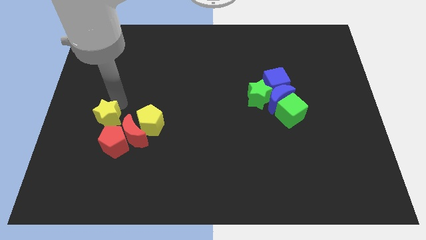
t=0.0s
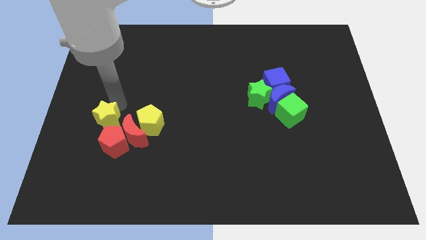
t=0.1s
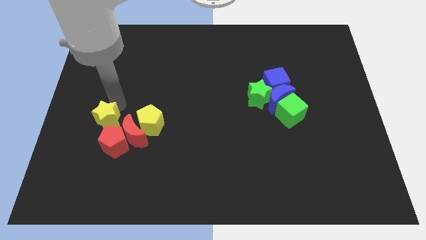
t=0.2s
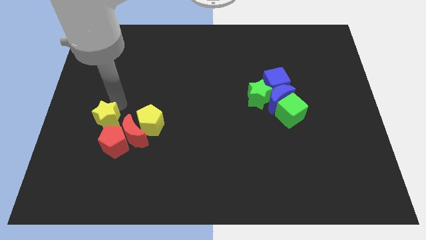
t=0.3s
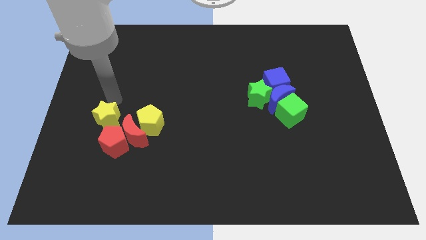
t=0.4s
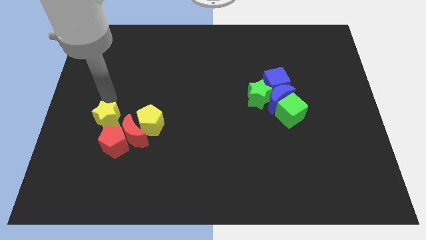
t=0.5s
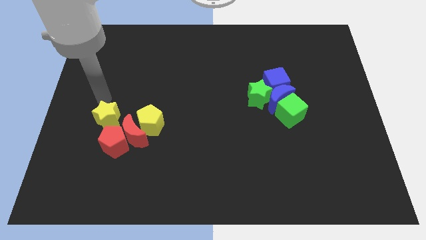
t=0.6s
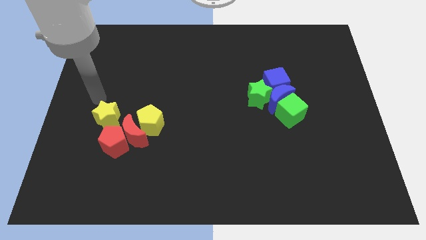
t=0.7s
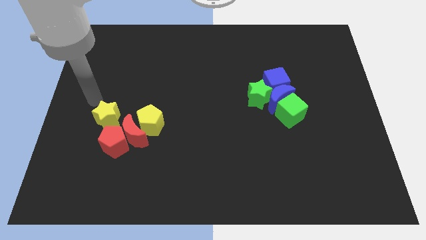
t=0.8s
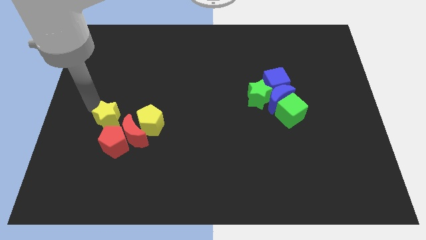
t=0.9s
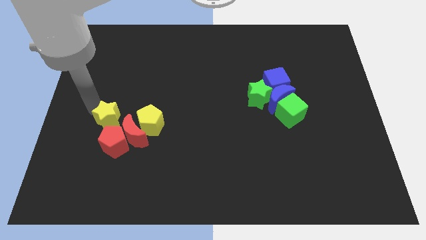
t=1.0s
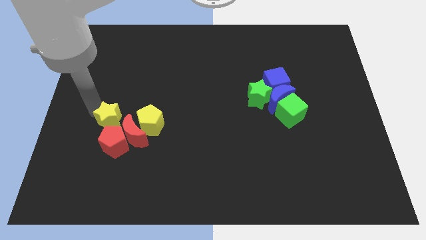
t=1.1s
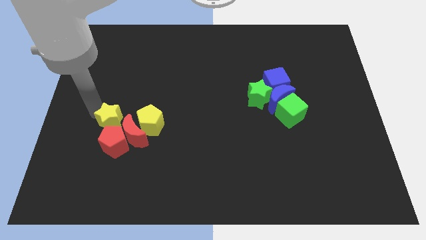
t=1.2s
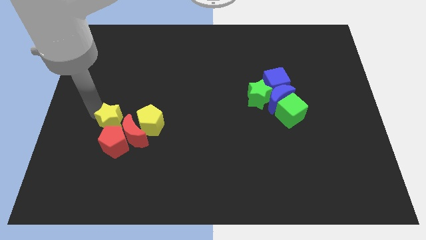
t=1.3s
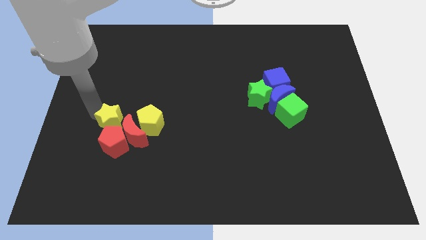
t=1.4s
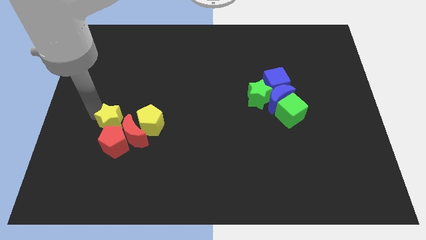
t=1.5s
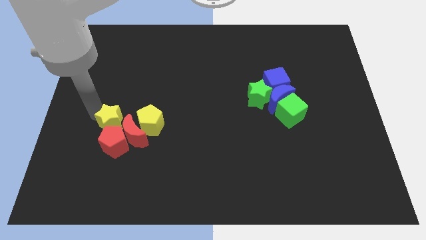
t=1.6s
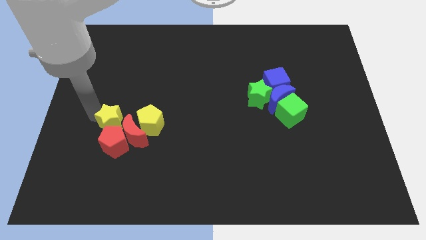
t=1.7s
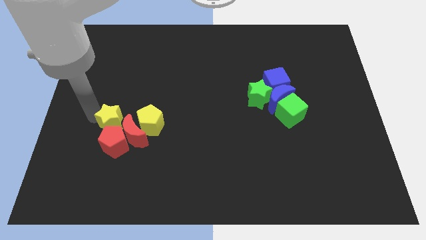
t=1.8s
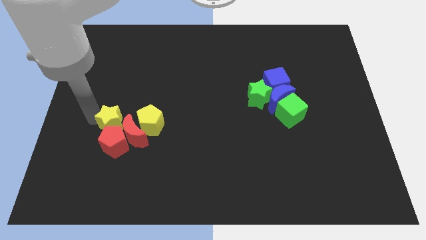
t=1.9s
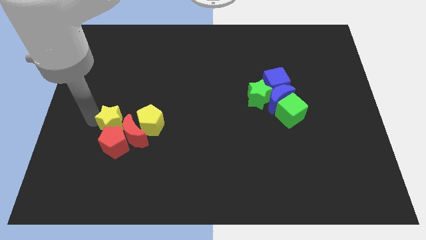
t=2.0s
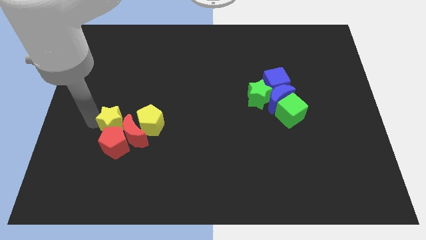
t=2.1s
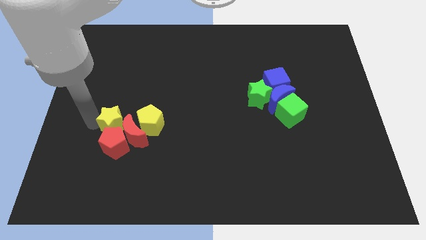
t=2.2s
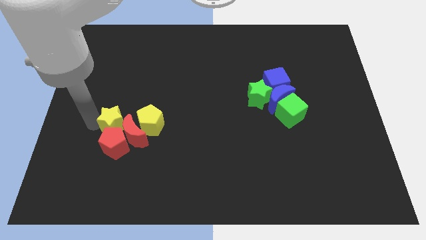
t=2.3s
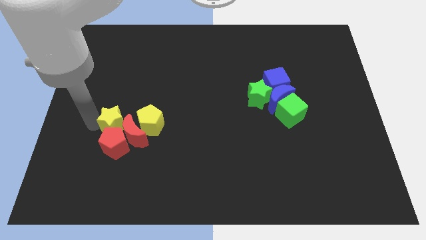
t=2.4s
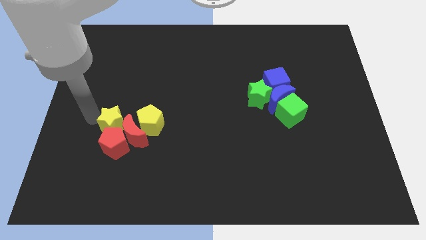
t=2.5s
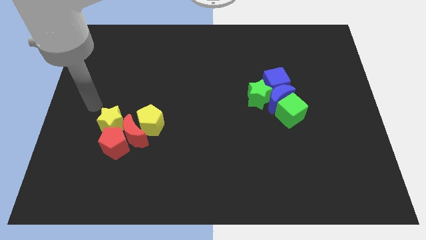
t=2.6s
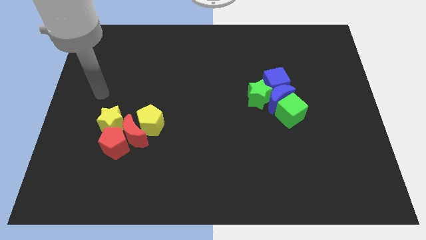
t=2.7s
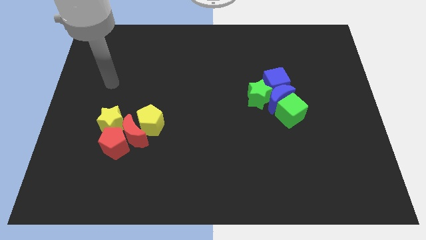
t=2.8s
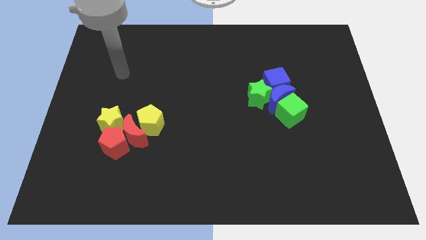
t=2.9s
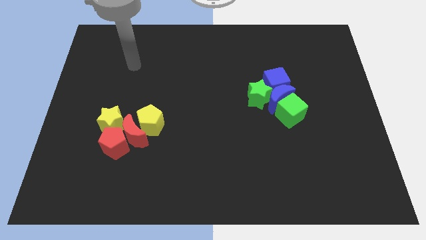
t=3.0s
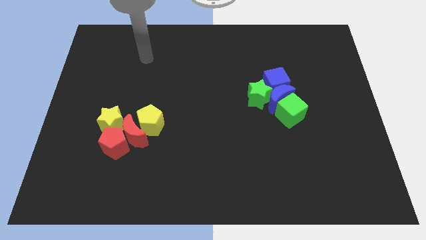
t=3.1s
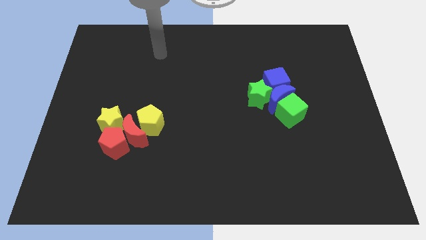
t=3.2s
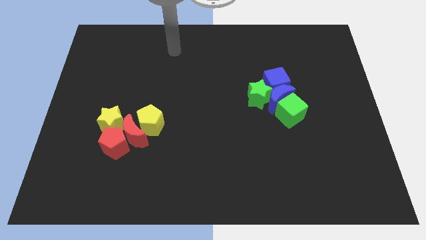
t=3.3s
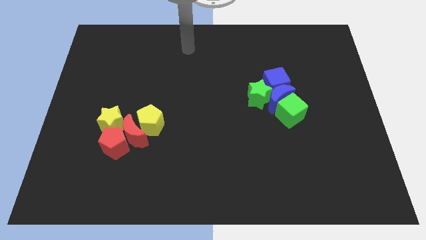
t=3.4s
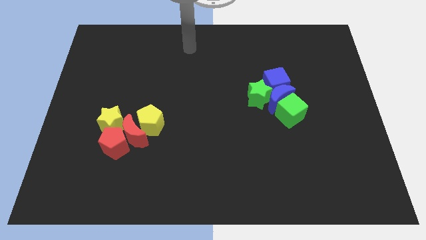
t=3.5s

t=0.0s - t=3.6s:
slightly move the yellow star to the top of red crescent and red pentagon

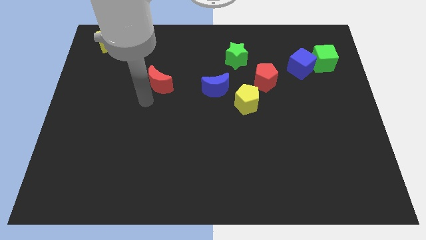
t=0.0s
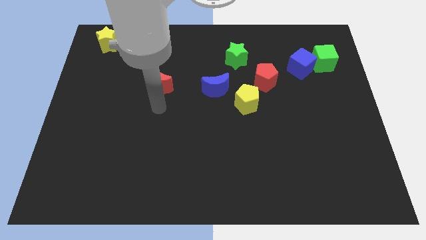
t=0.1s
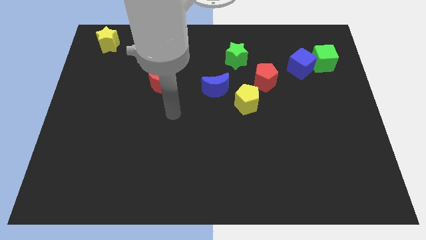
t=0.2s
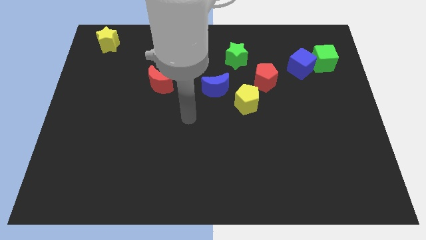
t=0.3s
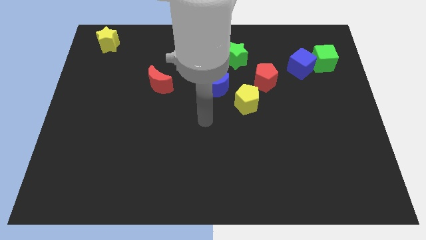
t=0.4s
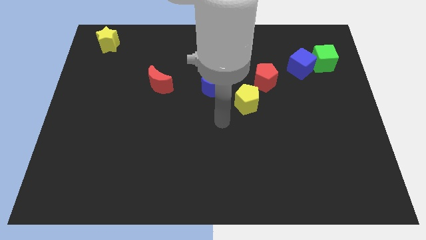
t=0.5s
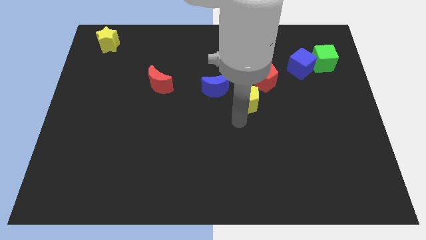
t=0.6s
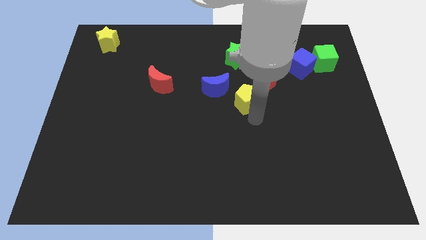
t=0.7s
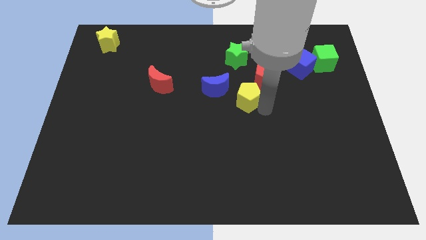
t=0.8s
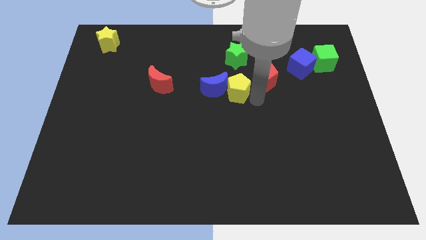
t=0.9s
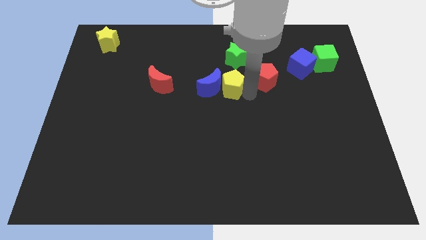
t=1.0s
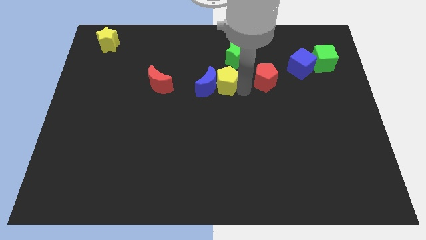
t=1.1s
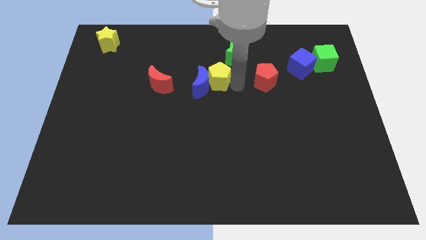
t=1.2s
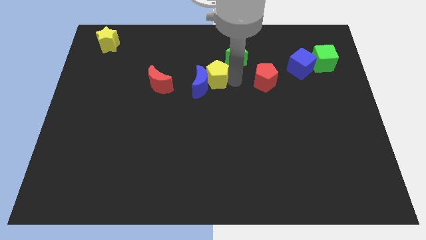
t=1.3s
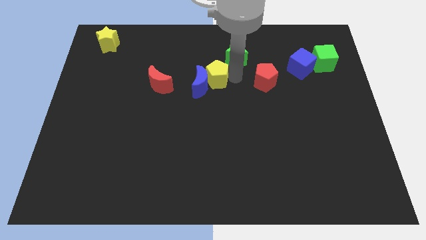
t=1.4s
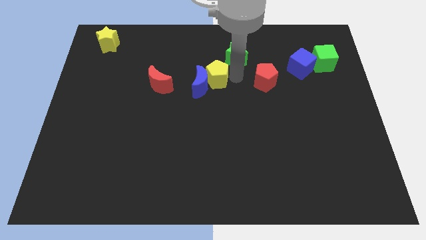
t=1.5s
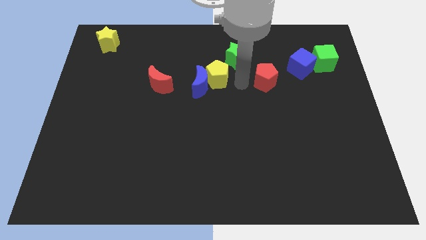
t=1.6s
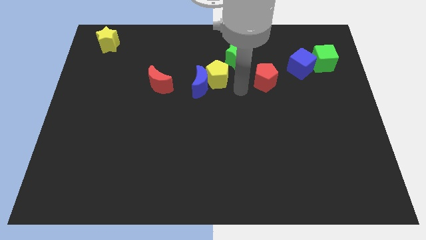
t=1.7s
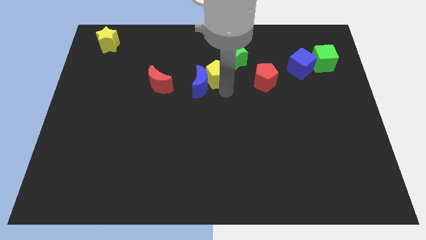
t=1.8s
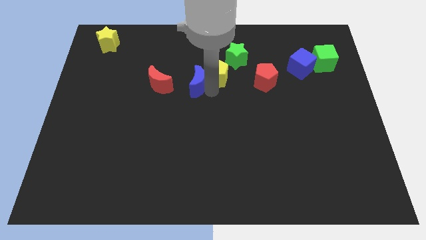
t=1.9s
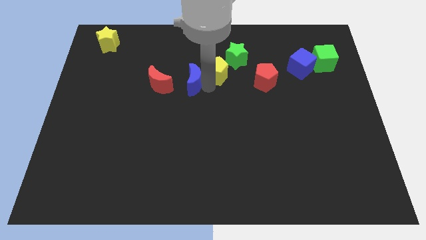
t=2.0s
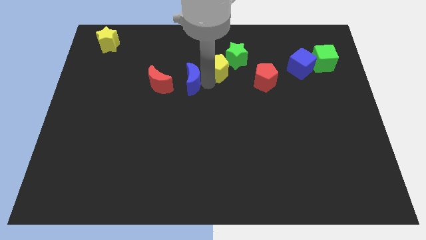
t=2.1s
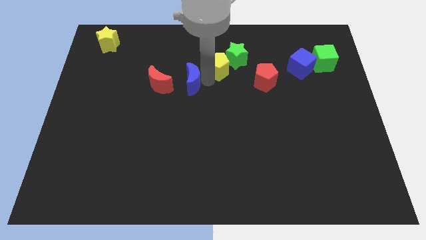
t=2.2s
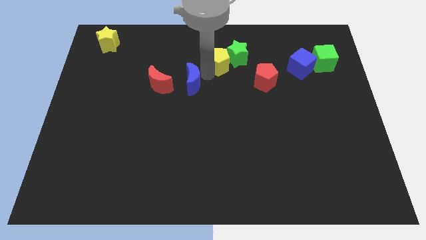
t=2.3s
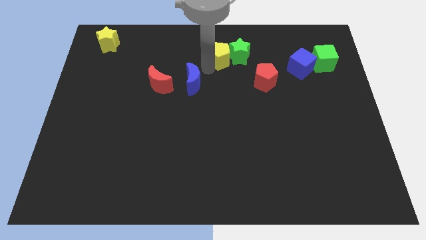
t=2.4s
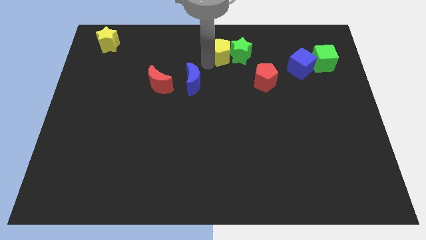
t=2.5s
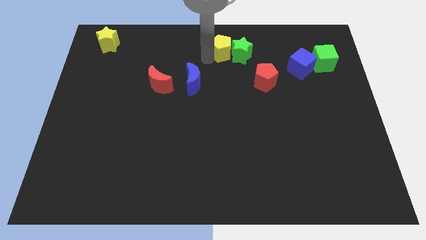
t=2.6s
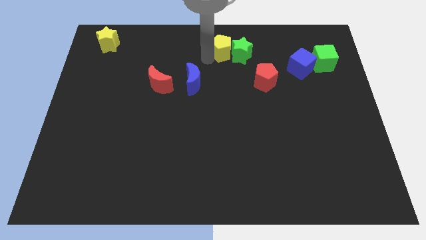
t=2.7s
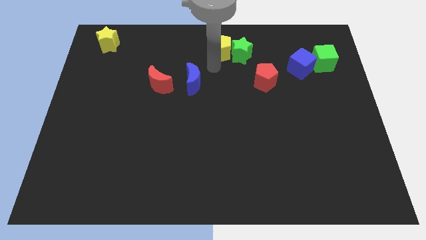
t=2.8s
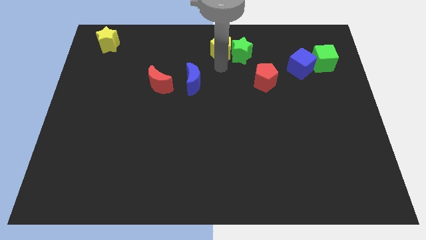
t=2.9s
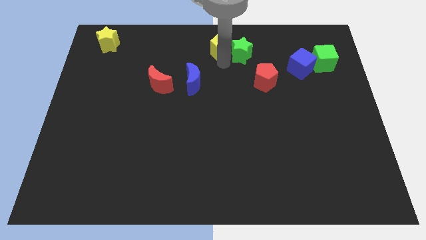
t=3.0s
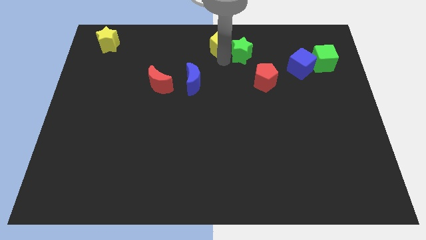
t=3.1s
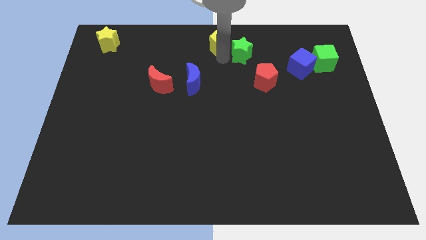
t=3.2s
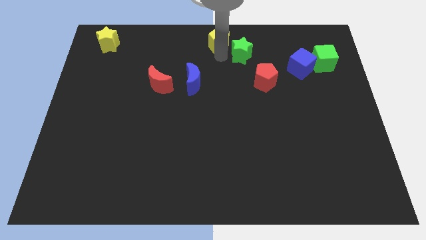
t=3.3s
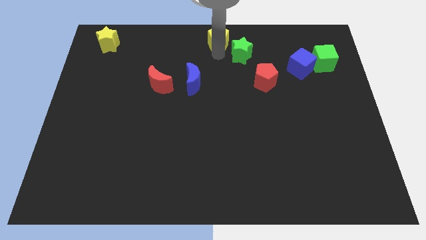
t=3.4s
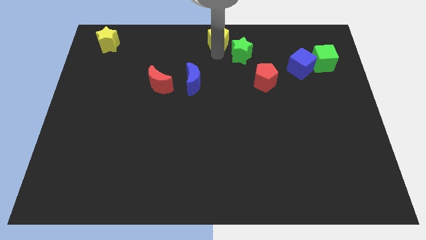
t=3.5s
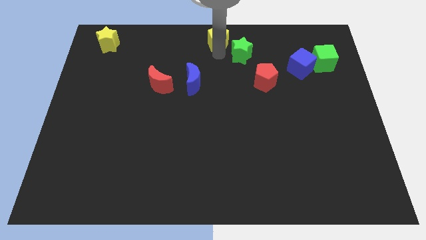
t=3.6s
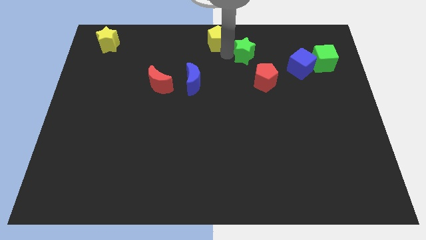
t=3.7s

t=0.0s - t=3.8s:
push the yellow pentagon to the top center of the board

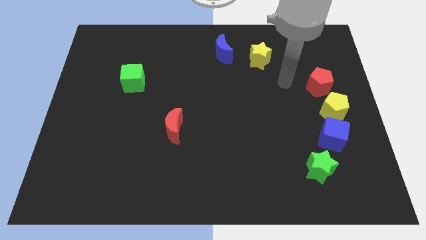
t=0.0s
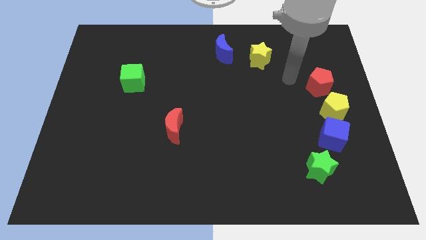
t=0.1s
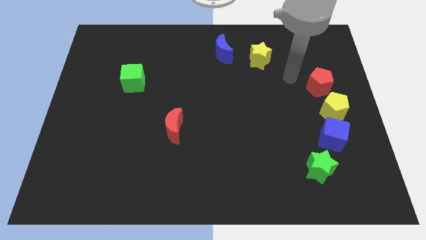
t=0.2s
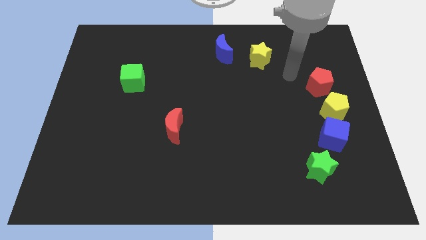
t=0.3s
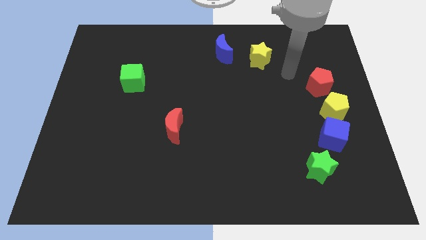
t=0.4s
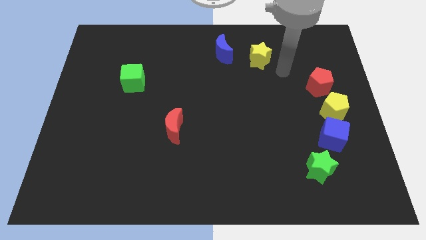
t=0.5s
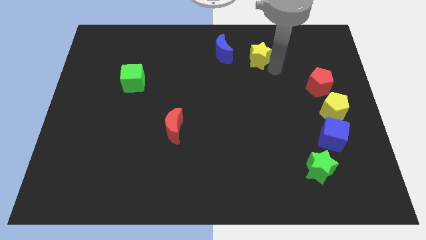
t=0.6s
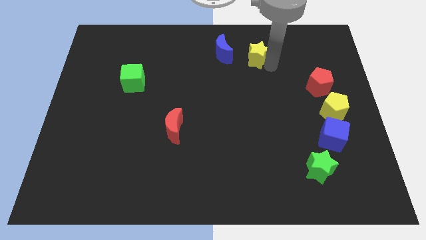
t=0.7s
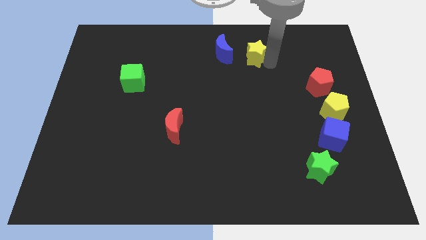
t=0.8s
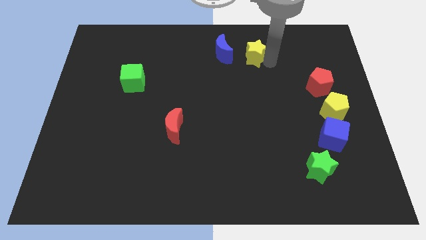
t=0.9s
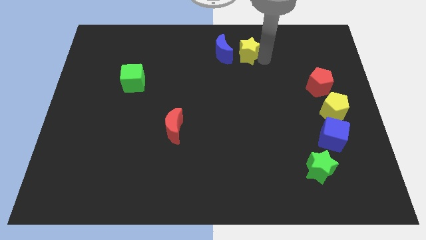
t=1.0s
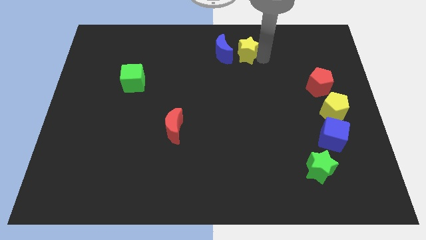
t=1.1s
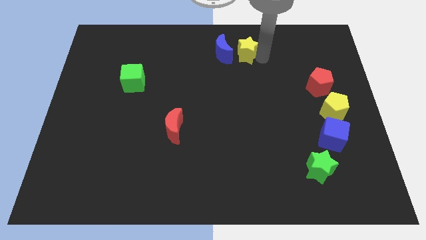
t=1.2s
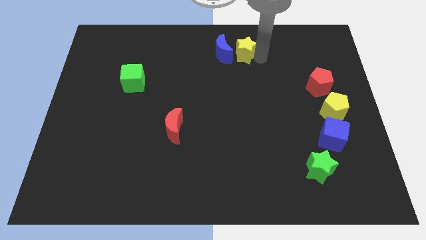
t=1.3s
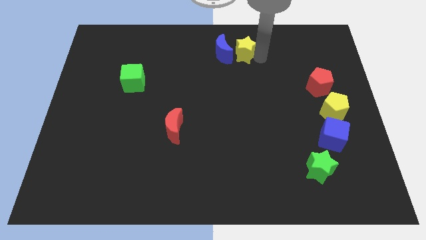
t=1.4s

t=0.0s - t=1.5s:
push the yellow star towards the blue crescent

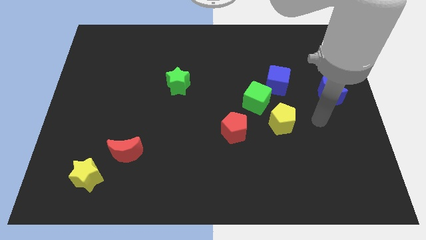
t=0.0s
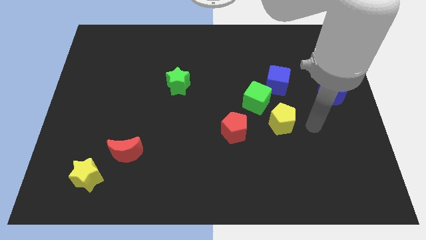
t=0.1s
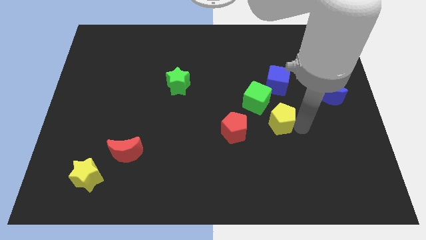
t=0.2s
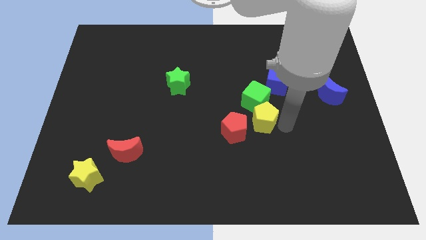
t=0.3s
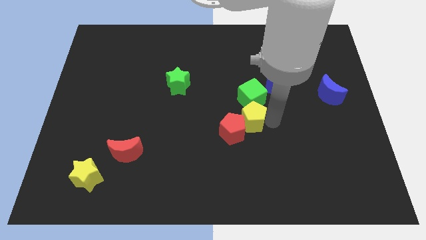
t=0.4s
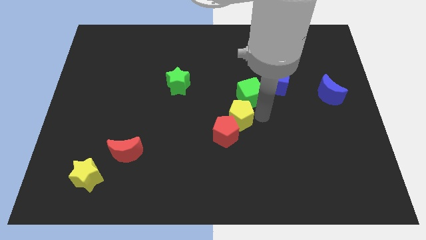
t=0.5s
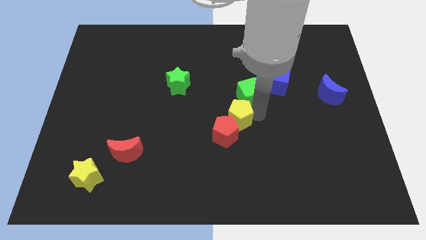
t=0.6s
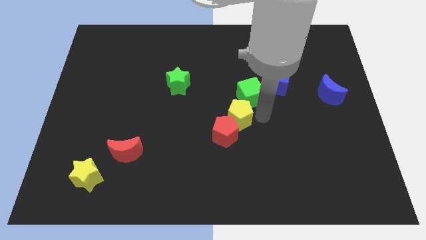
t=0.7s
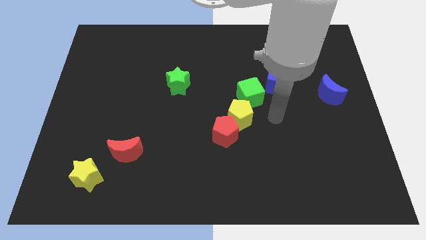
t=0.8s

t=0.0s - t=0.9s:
move yellow pentagon in between red pentagon and green cube
